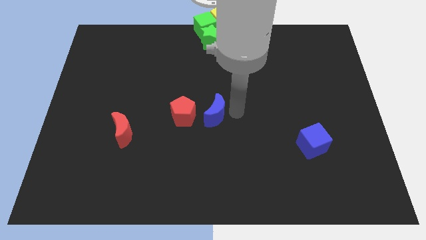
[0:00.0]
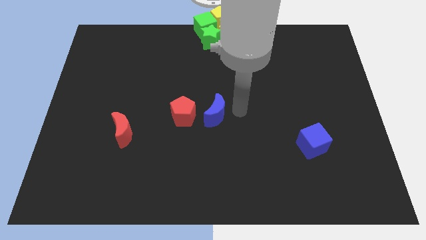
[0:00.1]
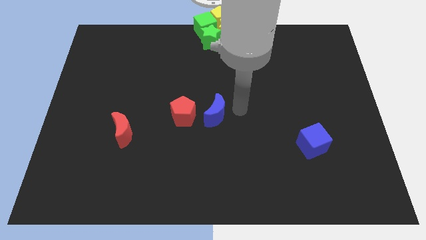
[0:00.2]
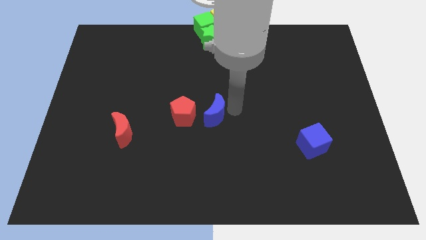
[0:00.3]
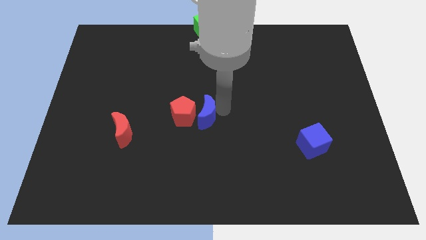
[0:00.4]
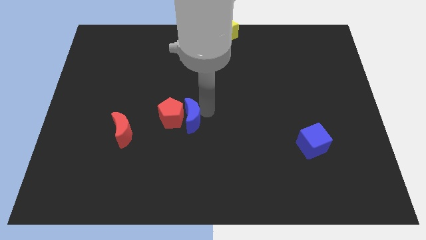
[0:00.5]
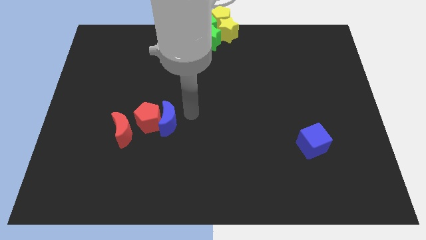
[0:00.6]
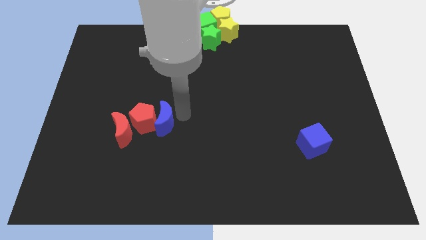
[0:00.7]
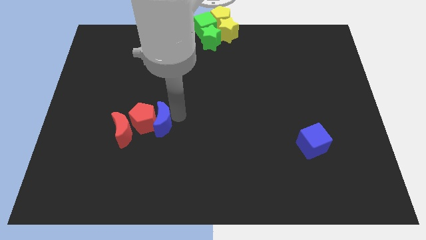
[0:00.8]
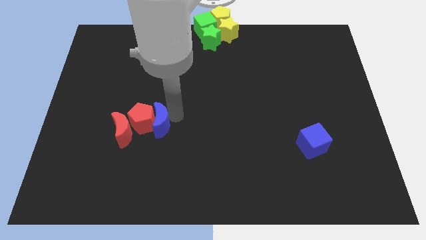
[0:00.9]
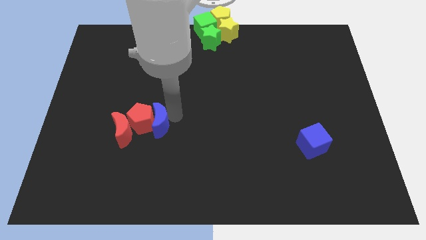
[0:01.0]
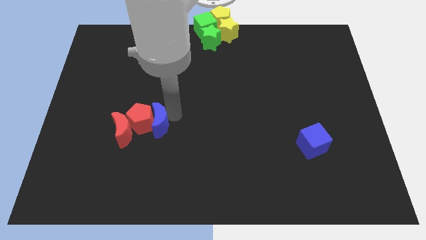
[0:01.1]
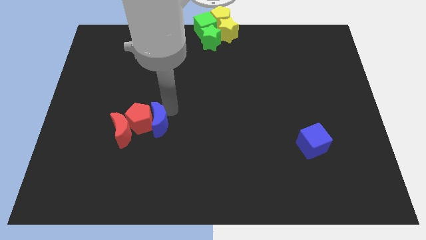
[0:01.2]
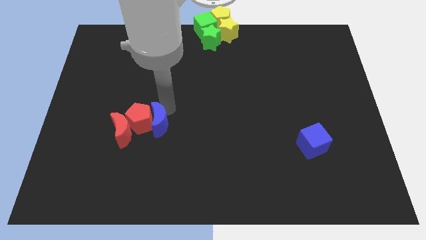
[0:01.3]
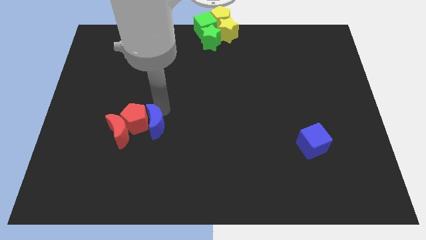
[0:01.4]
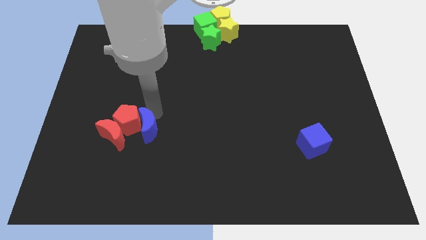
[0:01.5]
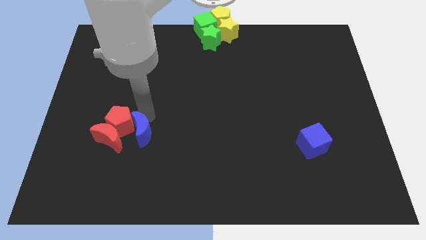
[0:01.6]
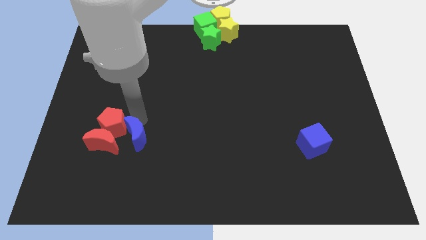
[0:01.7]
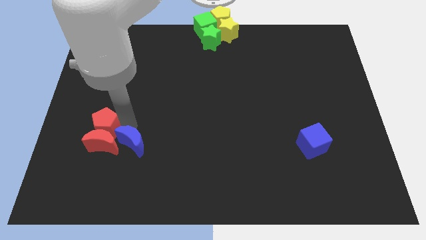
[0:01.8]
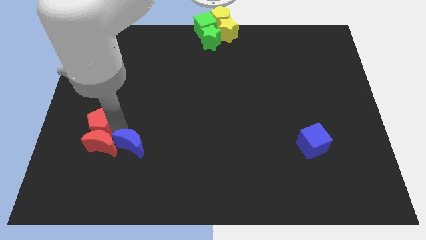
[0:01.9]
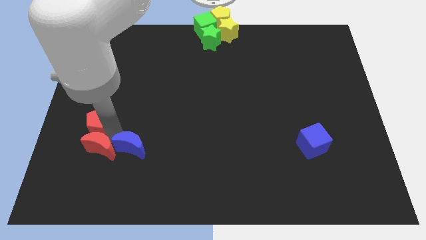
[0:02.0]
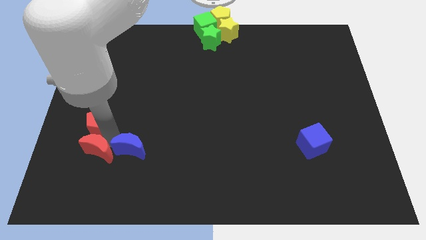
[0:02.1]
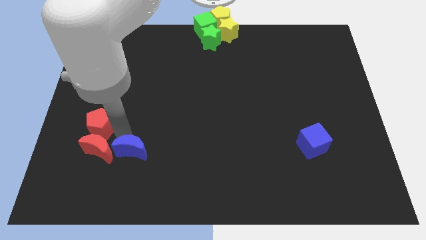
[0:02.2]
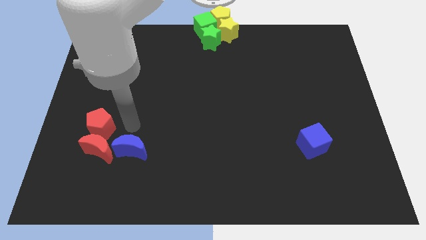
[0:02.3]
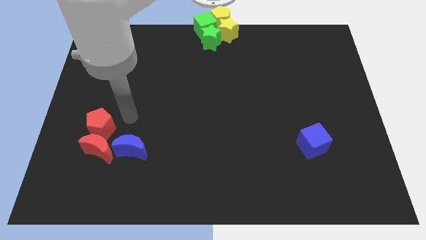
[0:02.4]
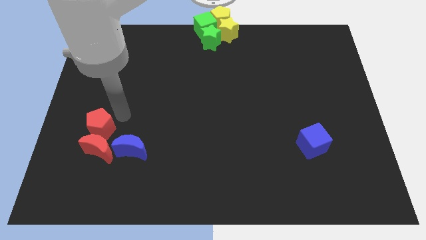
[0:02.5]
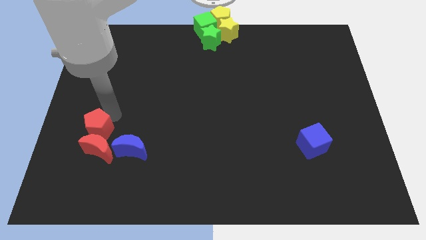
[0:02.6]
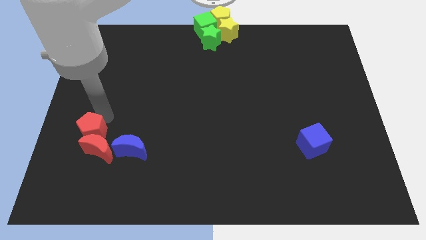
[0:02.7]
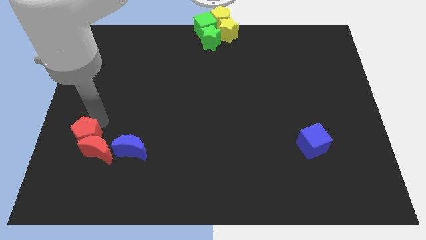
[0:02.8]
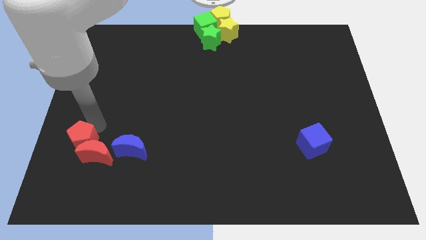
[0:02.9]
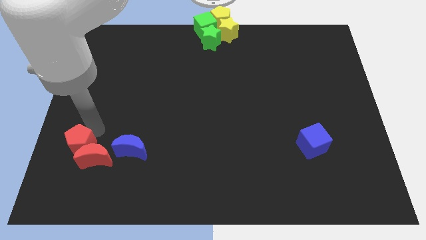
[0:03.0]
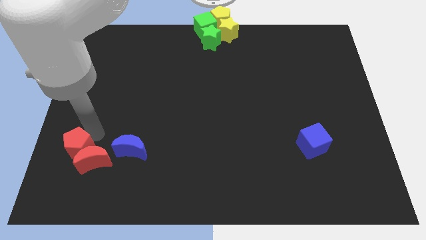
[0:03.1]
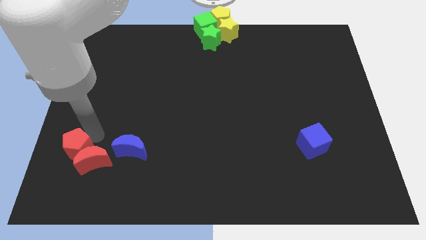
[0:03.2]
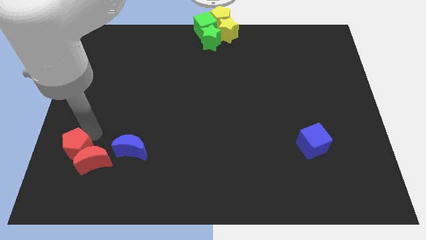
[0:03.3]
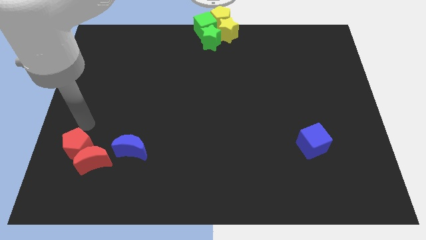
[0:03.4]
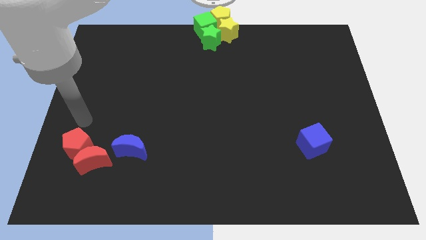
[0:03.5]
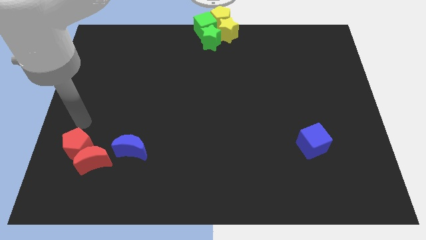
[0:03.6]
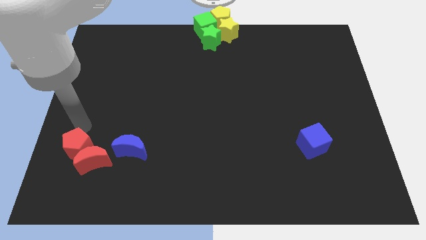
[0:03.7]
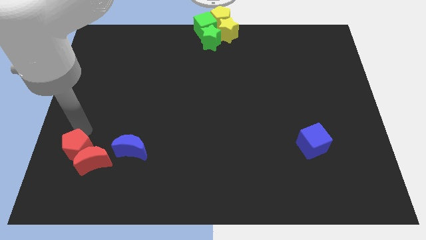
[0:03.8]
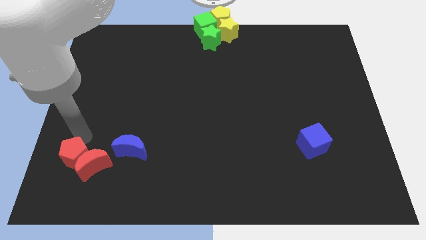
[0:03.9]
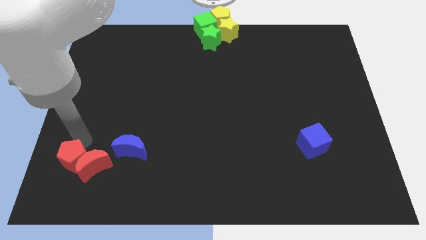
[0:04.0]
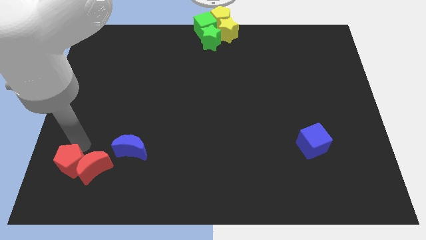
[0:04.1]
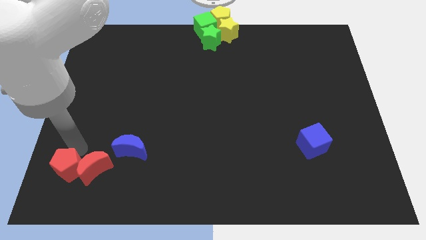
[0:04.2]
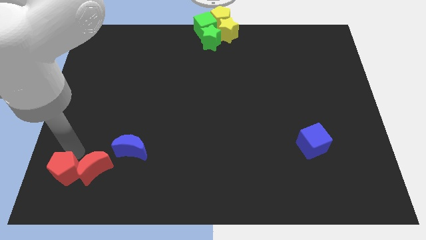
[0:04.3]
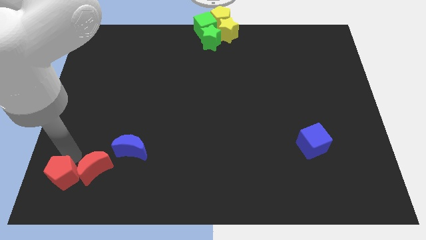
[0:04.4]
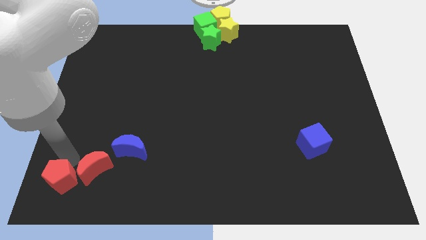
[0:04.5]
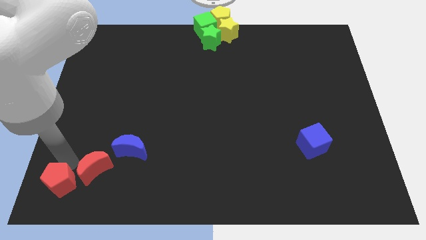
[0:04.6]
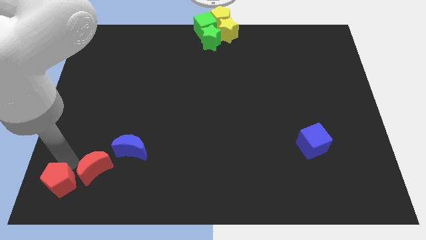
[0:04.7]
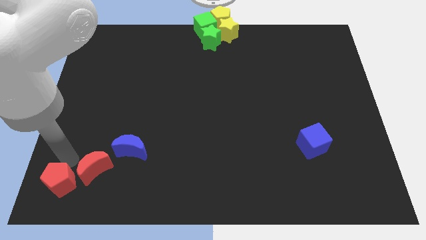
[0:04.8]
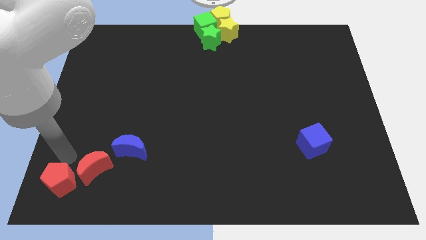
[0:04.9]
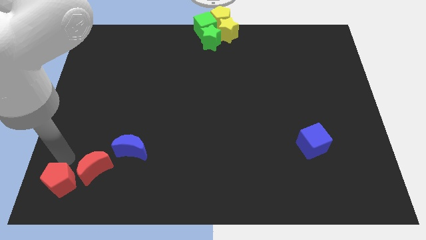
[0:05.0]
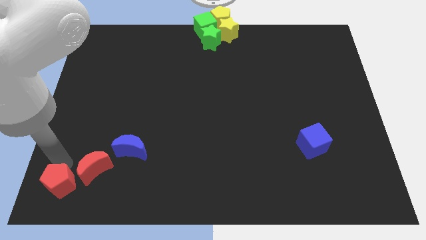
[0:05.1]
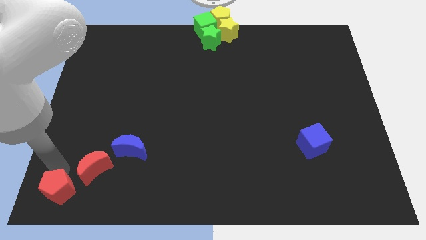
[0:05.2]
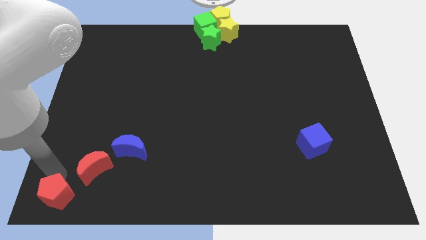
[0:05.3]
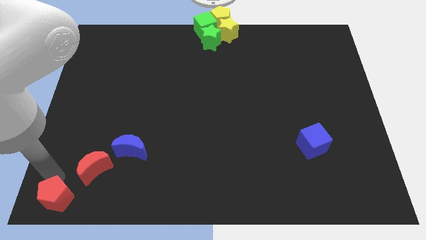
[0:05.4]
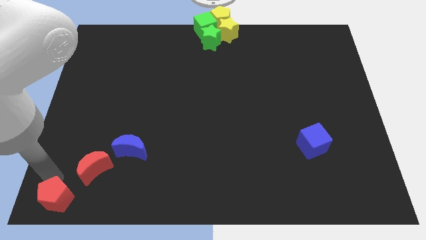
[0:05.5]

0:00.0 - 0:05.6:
move red blocks and the blue moon towards the bottom left

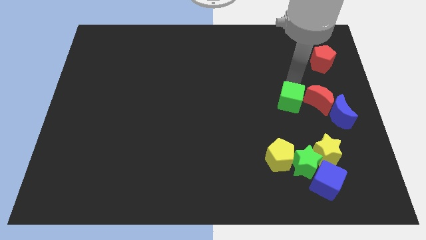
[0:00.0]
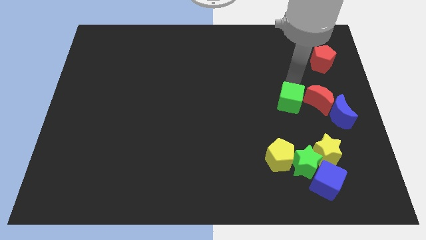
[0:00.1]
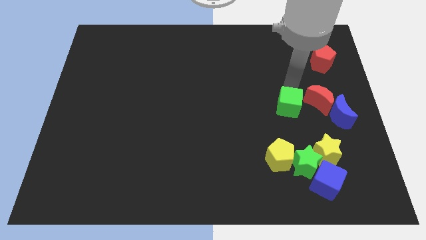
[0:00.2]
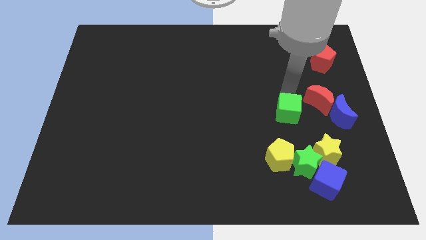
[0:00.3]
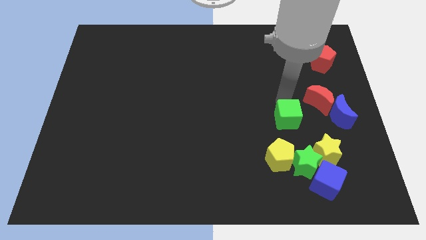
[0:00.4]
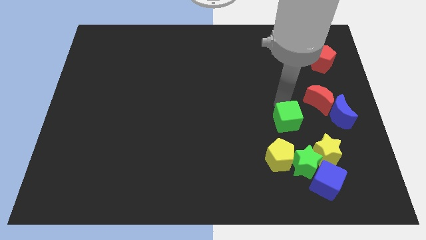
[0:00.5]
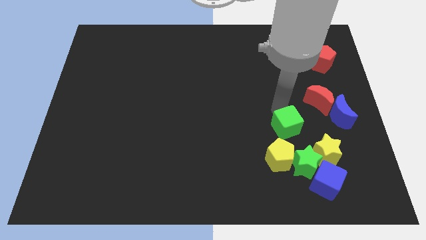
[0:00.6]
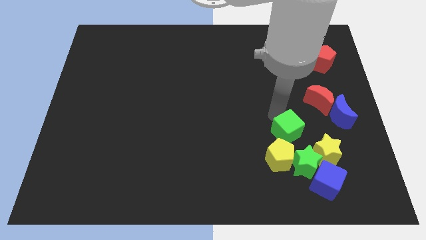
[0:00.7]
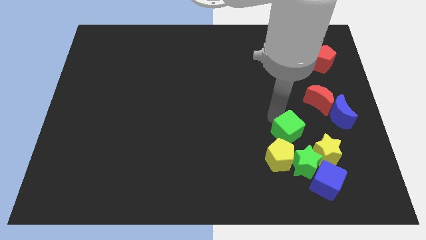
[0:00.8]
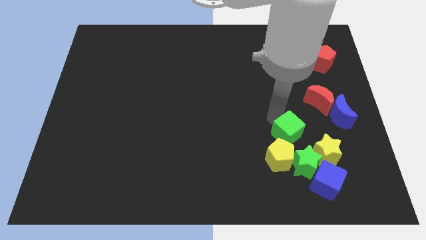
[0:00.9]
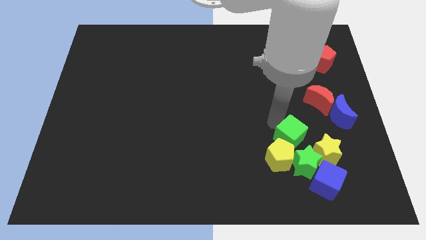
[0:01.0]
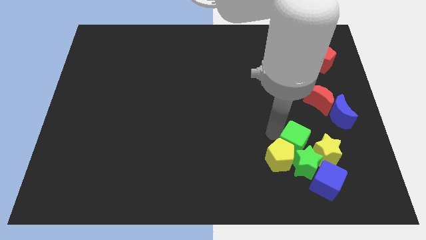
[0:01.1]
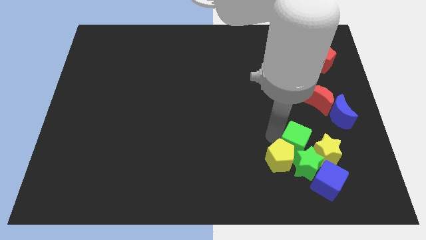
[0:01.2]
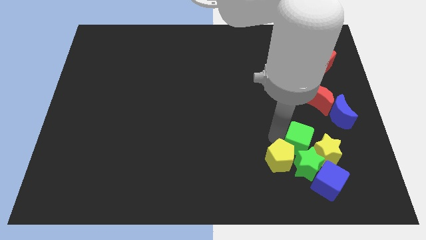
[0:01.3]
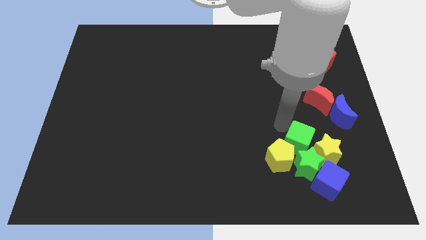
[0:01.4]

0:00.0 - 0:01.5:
push the green cube into the green star

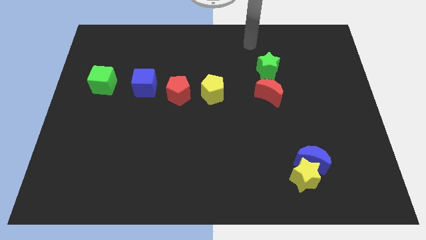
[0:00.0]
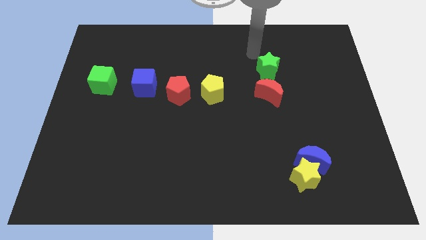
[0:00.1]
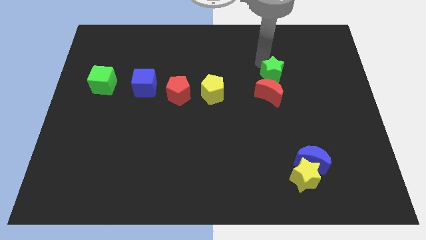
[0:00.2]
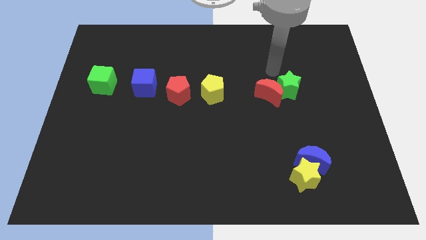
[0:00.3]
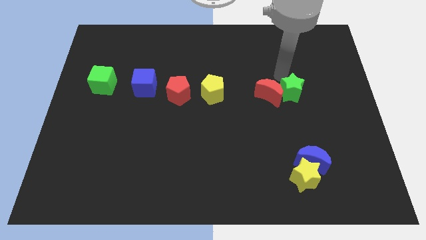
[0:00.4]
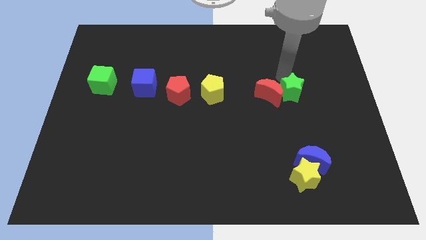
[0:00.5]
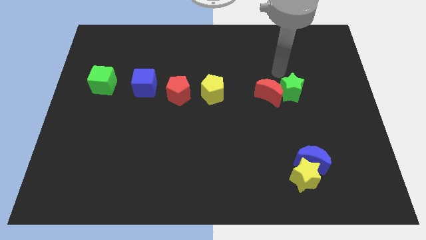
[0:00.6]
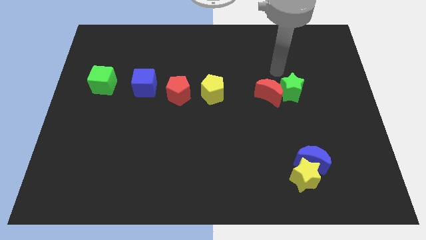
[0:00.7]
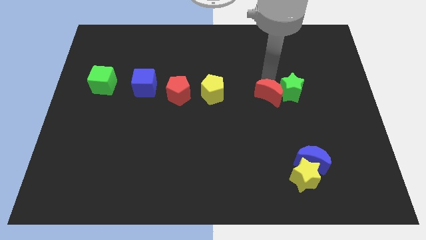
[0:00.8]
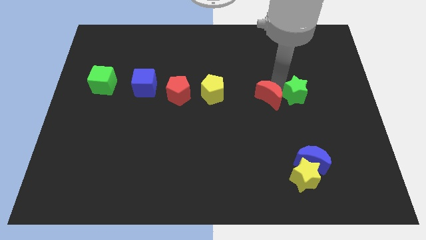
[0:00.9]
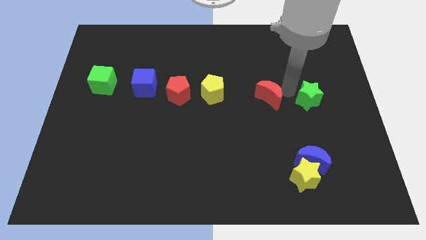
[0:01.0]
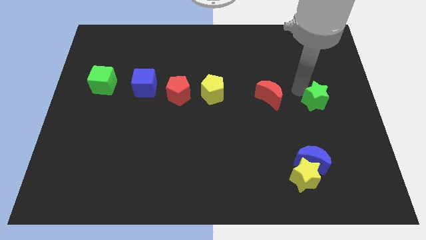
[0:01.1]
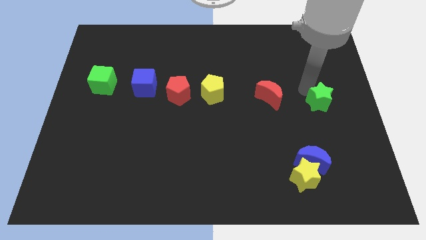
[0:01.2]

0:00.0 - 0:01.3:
move the green star to the right of the red moon

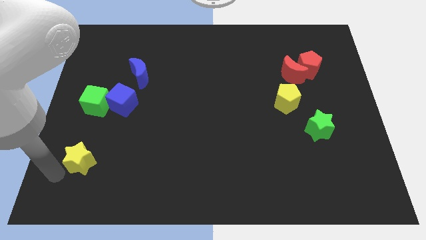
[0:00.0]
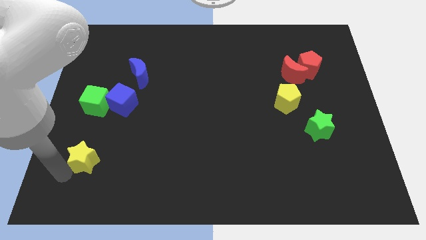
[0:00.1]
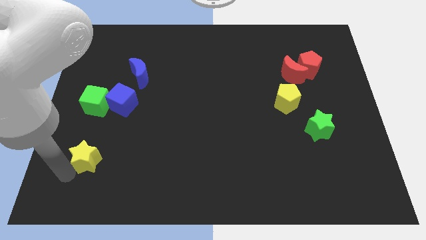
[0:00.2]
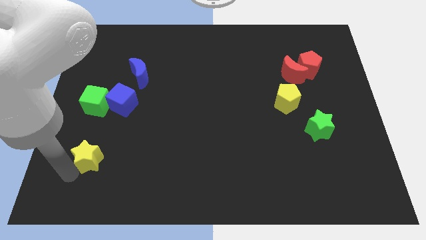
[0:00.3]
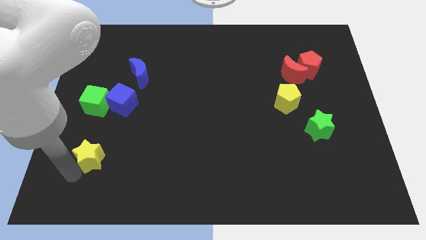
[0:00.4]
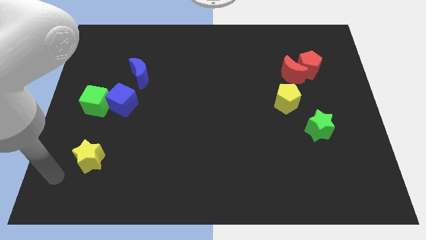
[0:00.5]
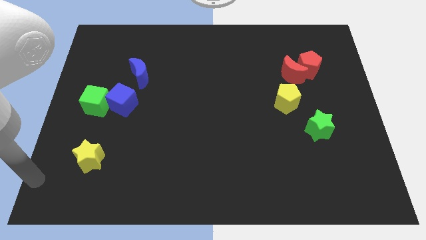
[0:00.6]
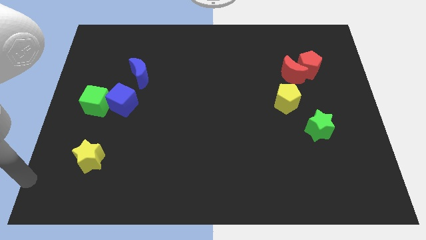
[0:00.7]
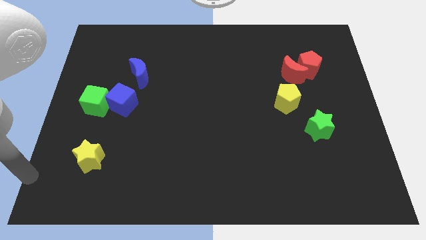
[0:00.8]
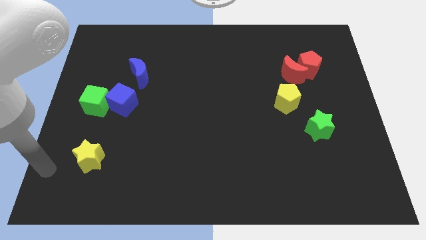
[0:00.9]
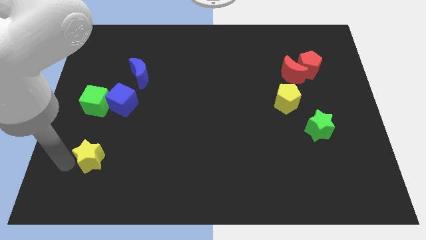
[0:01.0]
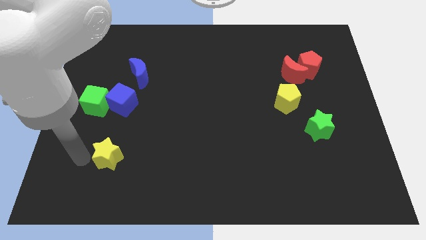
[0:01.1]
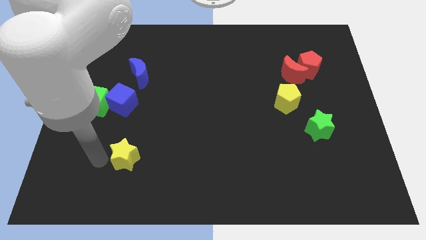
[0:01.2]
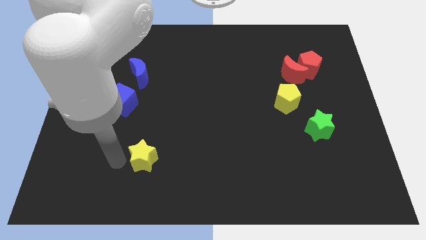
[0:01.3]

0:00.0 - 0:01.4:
slightly push the yellow star towards the right
